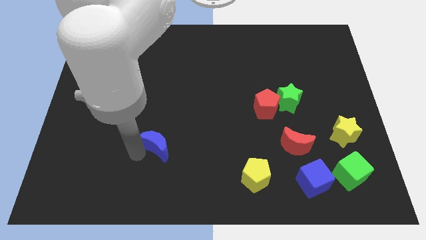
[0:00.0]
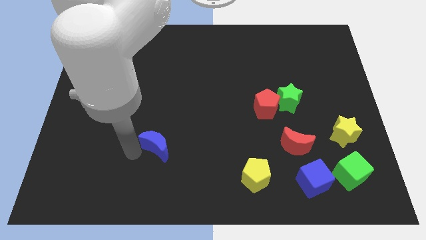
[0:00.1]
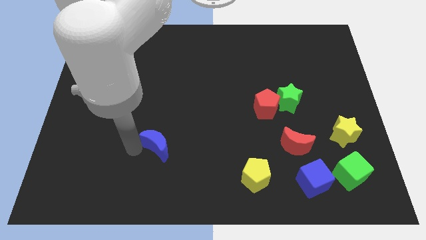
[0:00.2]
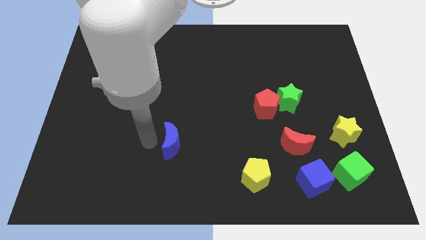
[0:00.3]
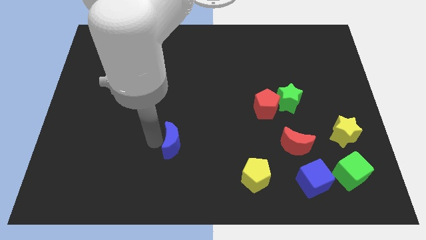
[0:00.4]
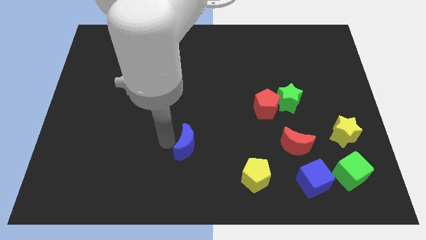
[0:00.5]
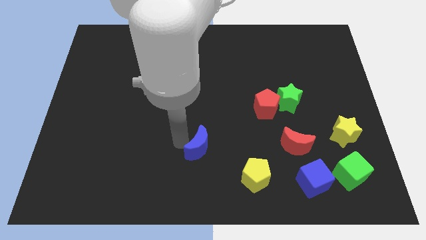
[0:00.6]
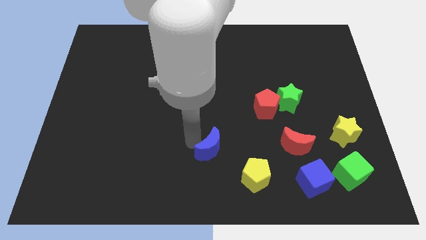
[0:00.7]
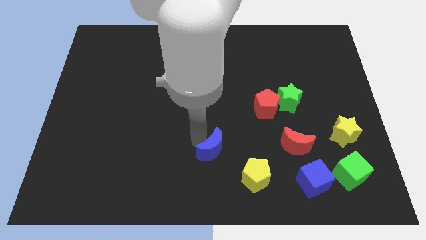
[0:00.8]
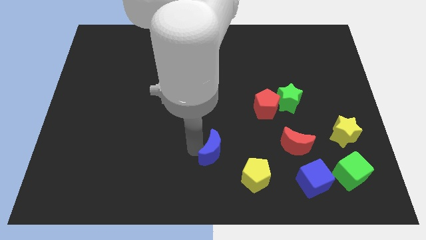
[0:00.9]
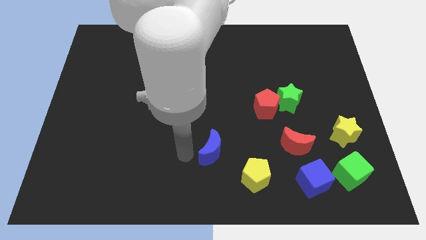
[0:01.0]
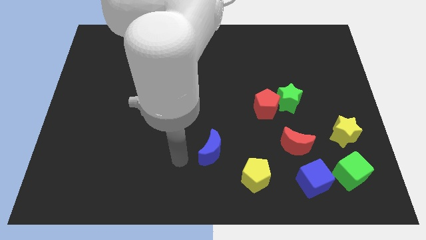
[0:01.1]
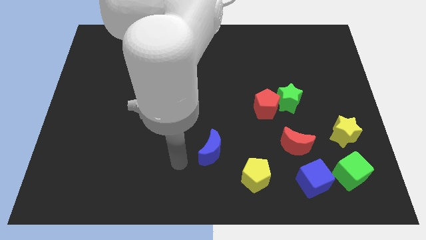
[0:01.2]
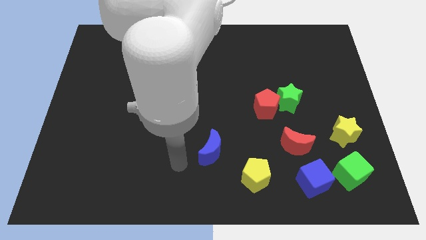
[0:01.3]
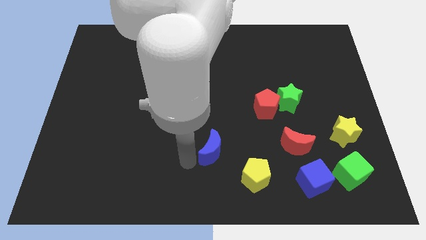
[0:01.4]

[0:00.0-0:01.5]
move the blue crescent to the top left of the yellow pentagon

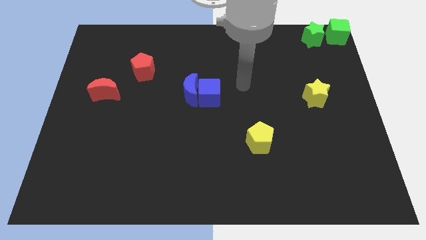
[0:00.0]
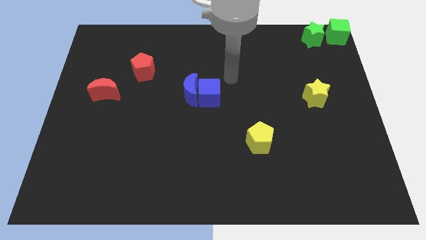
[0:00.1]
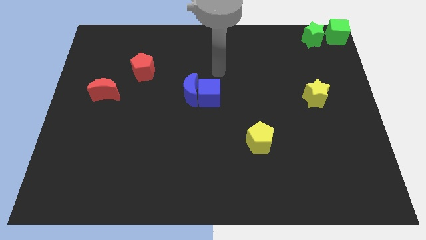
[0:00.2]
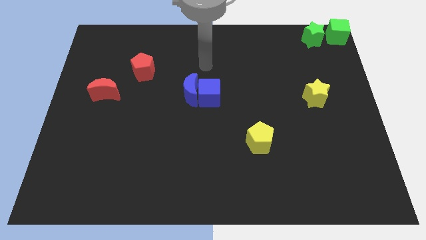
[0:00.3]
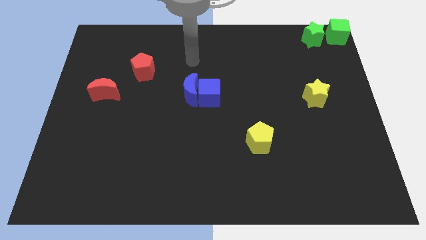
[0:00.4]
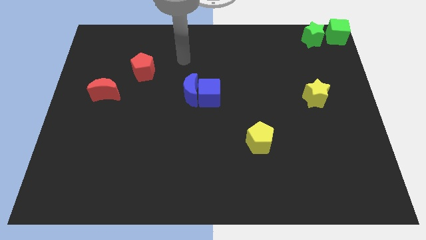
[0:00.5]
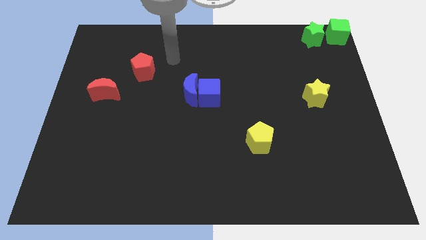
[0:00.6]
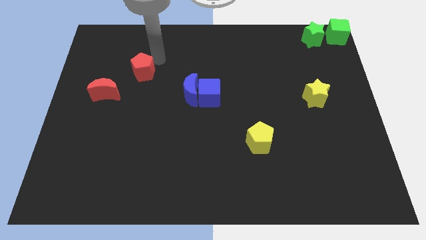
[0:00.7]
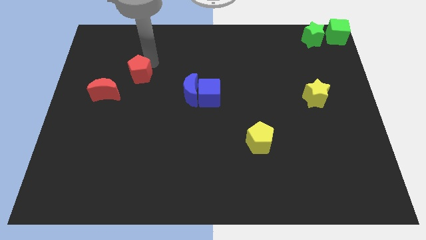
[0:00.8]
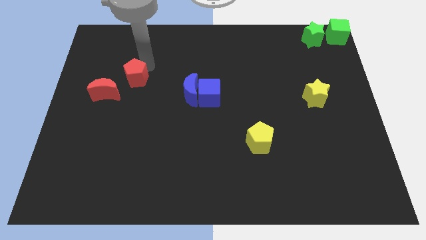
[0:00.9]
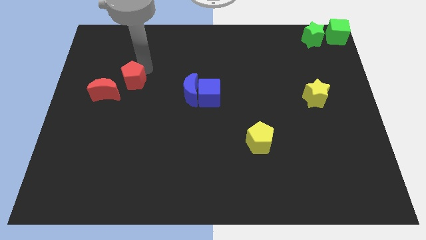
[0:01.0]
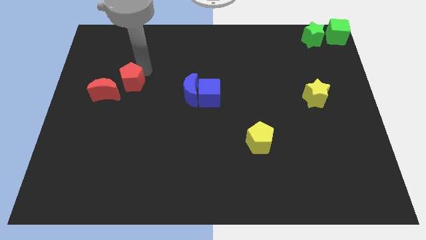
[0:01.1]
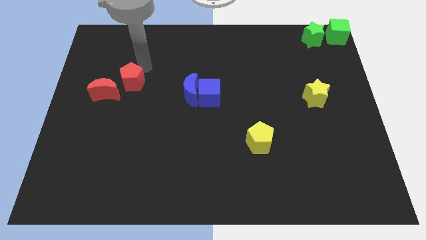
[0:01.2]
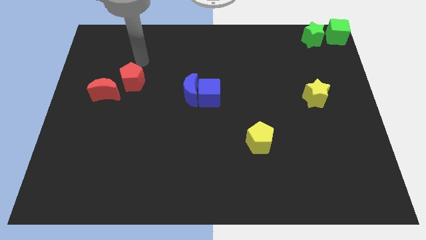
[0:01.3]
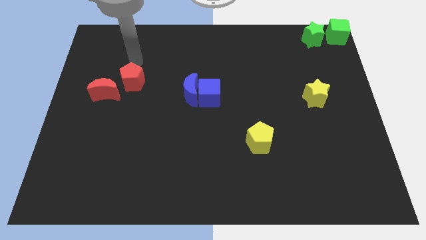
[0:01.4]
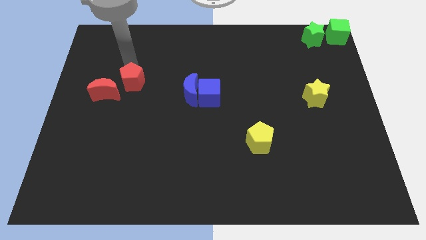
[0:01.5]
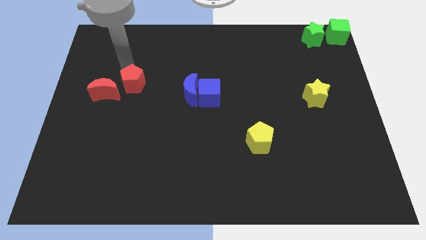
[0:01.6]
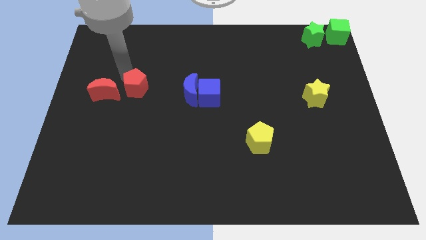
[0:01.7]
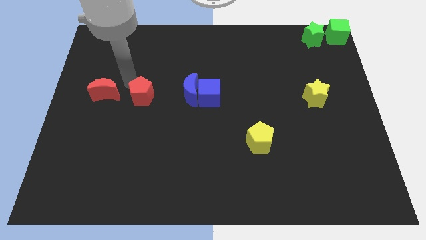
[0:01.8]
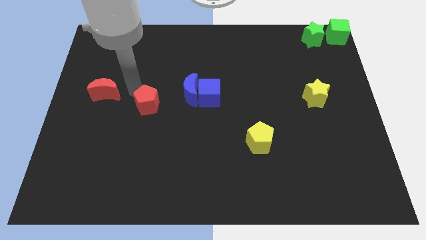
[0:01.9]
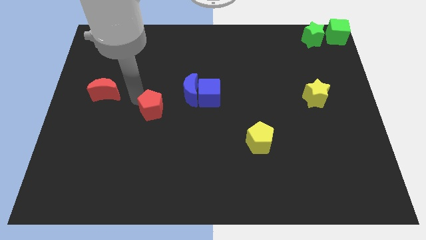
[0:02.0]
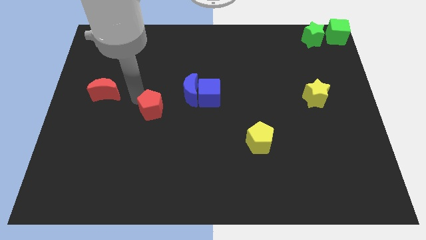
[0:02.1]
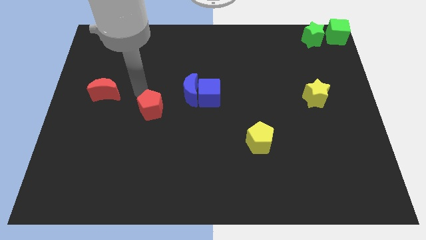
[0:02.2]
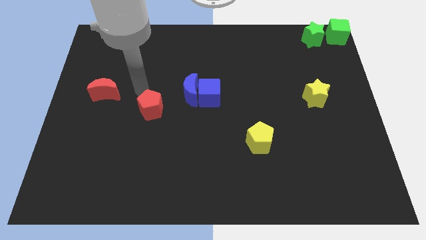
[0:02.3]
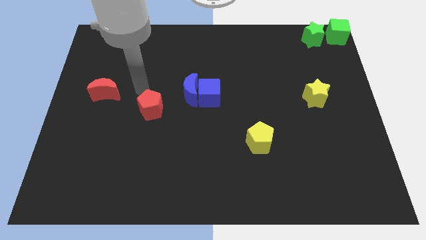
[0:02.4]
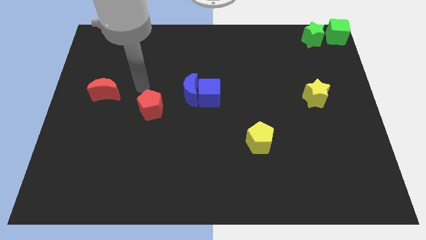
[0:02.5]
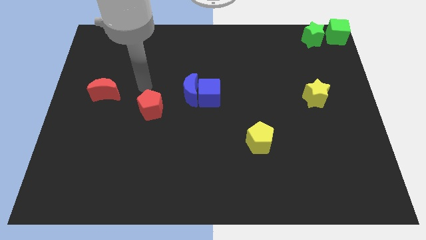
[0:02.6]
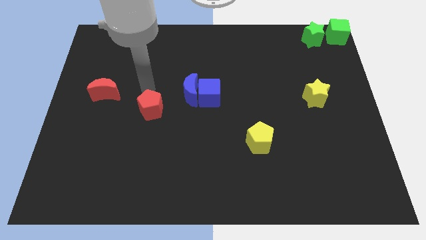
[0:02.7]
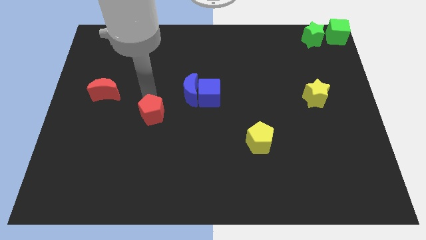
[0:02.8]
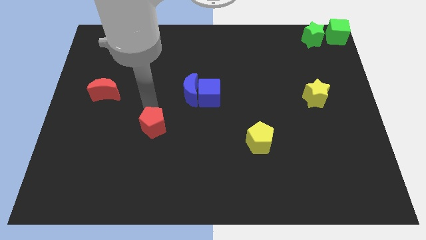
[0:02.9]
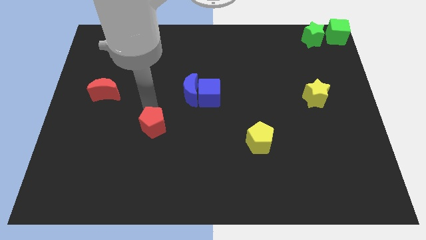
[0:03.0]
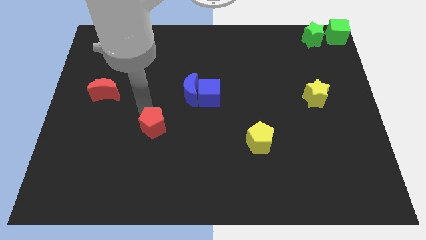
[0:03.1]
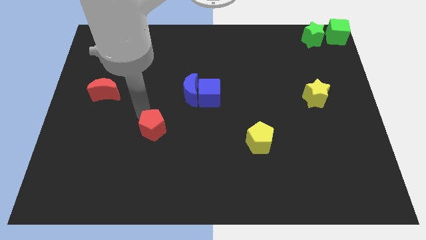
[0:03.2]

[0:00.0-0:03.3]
push the red pentagon towards the bottom

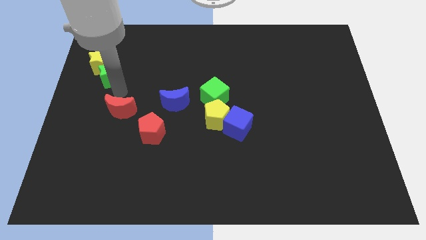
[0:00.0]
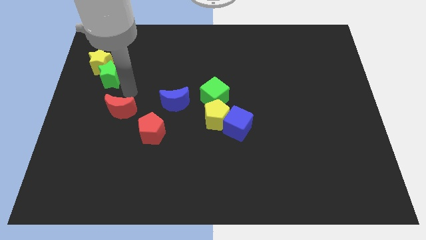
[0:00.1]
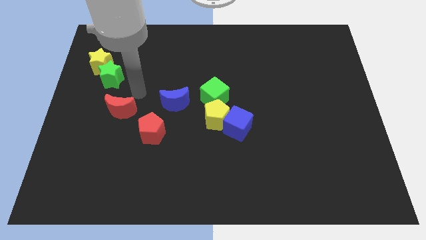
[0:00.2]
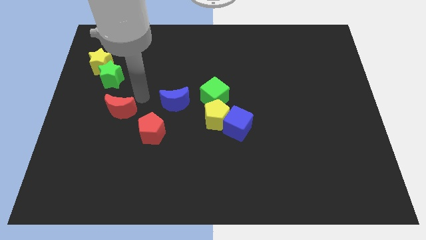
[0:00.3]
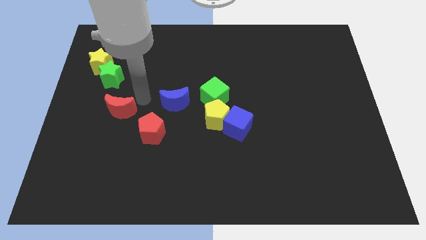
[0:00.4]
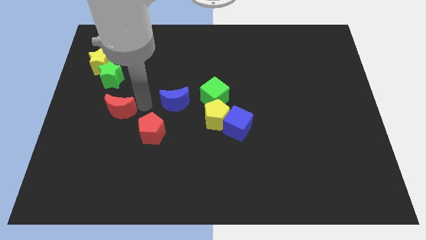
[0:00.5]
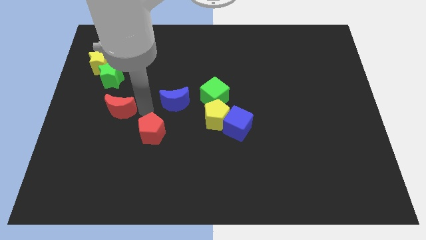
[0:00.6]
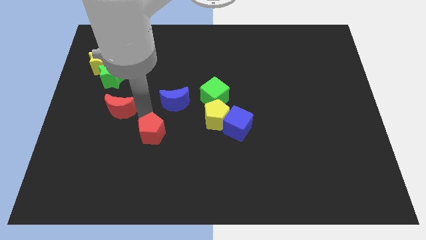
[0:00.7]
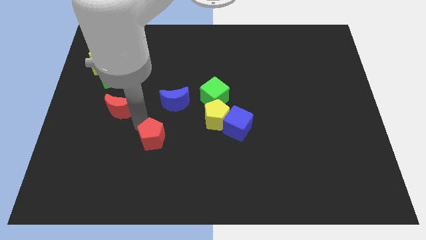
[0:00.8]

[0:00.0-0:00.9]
move arm near red pentagon

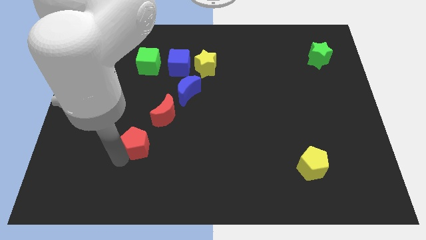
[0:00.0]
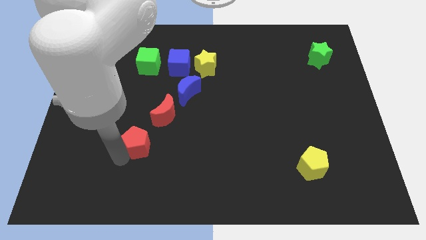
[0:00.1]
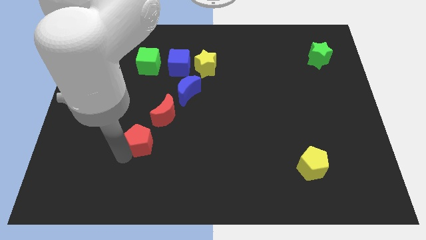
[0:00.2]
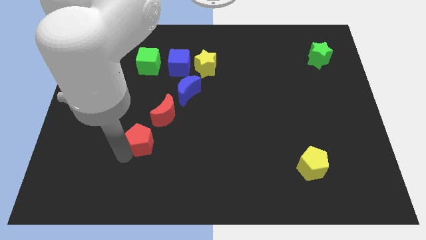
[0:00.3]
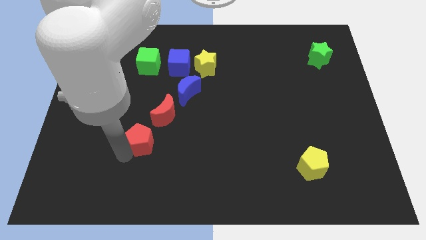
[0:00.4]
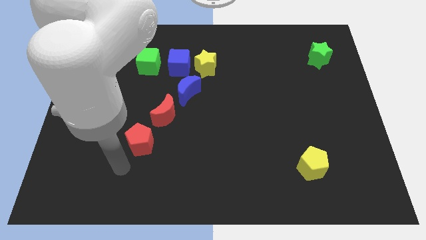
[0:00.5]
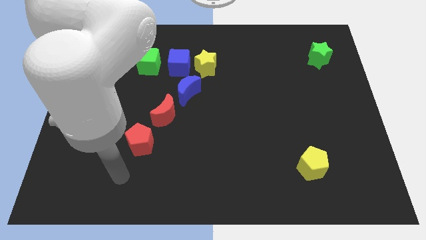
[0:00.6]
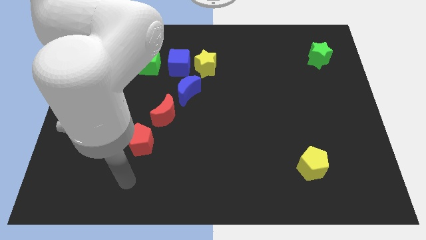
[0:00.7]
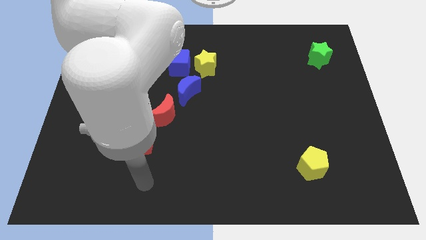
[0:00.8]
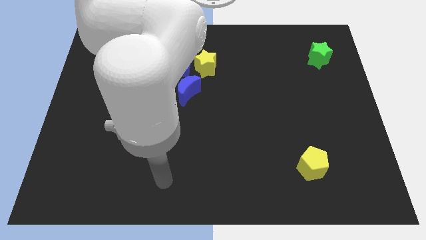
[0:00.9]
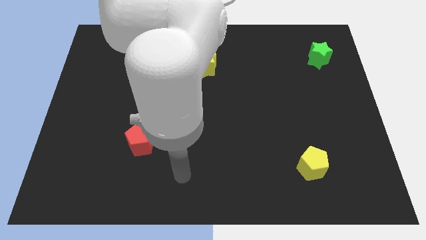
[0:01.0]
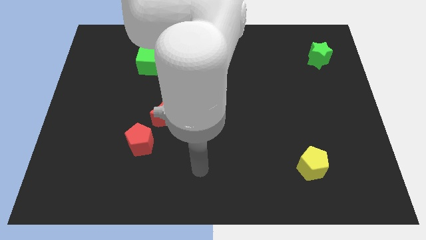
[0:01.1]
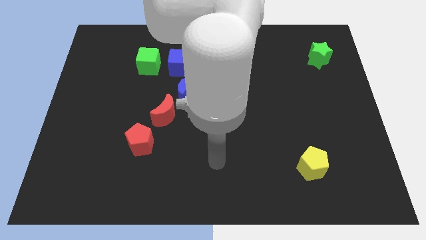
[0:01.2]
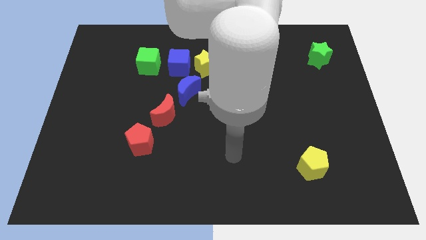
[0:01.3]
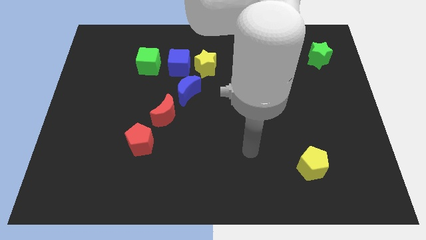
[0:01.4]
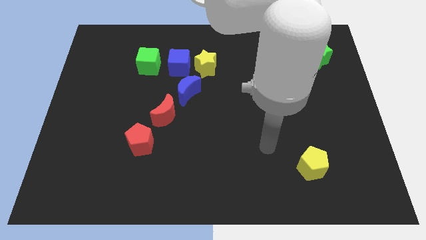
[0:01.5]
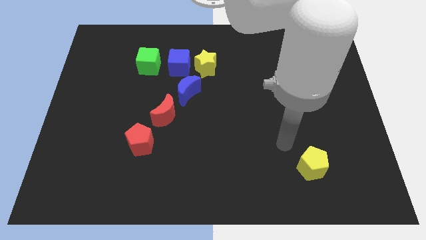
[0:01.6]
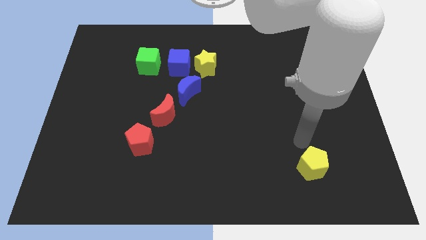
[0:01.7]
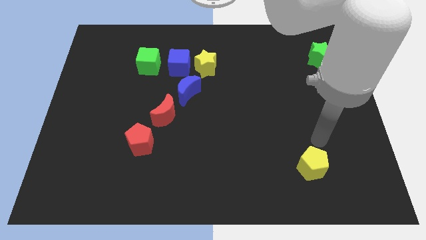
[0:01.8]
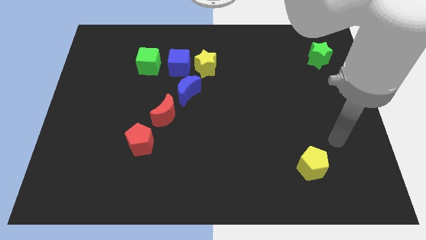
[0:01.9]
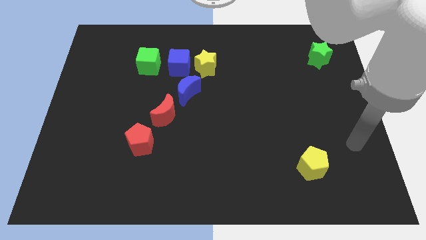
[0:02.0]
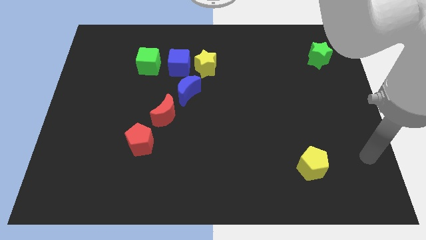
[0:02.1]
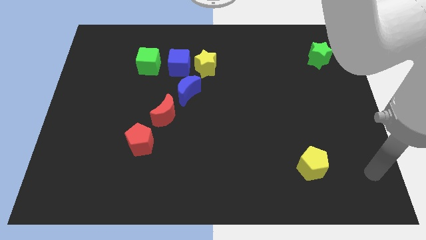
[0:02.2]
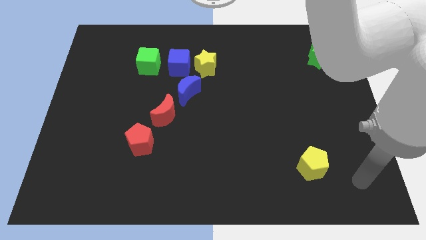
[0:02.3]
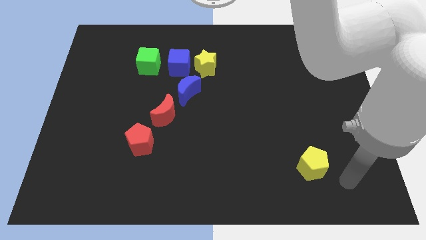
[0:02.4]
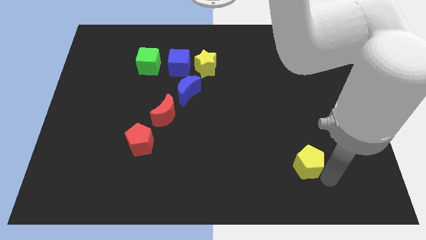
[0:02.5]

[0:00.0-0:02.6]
place the arm near the yellow pentagon

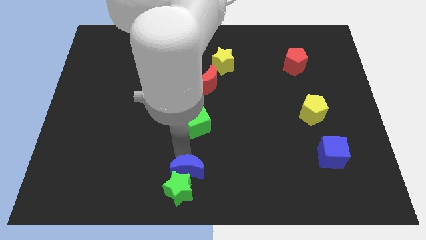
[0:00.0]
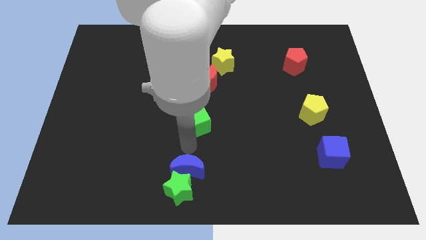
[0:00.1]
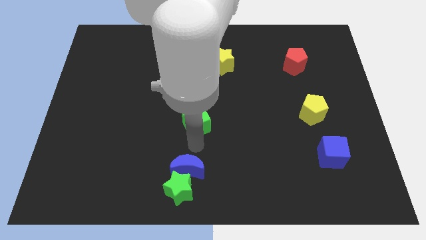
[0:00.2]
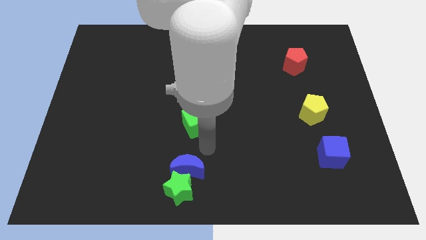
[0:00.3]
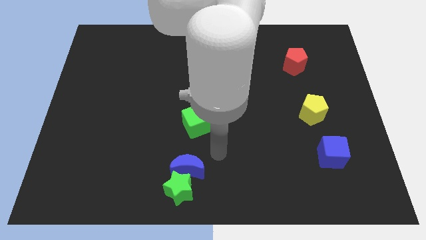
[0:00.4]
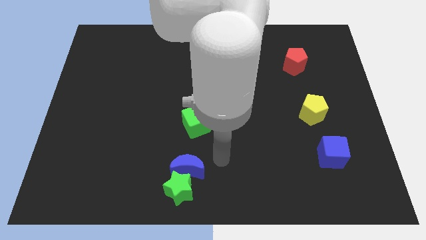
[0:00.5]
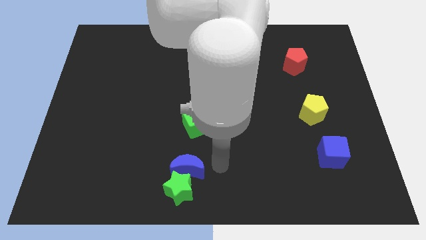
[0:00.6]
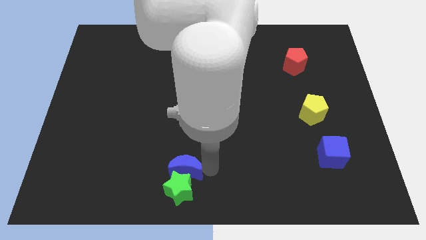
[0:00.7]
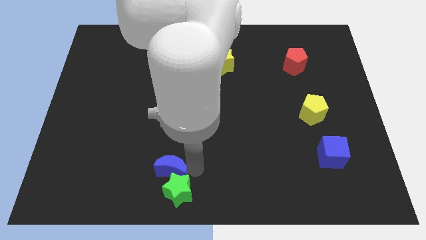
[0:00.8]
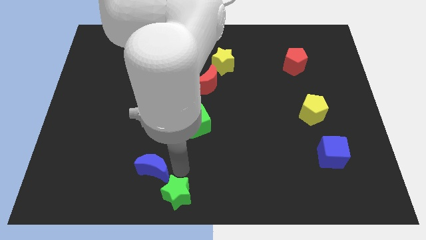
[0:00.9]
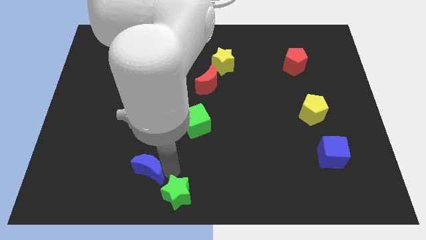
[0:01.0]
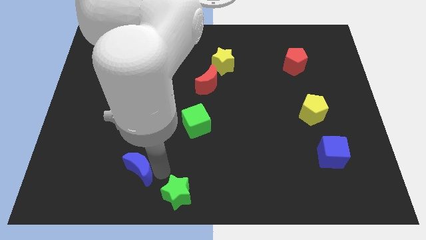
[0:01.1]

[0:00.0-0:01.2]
separate the blue crescent away from the green star
